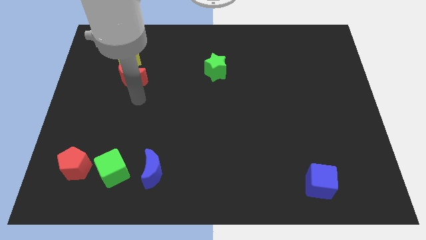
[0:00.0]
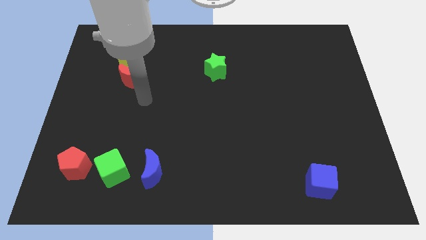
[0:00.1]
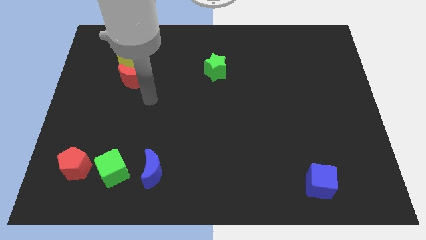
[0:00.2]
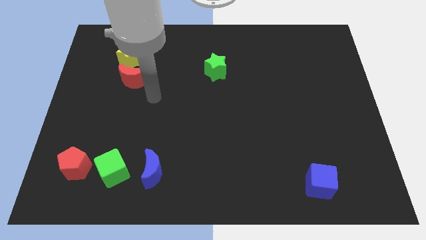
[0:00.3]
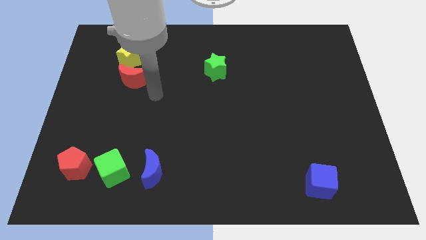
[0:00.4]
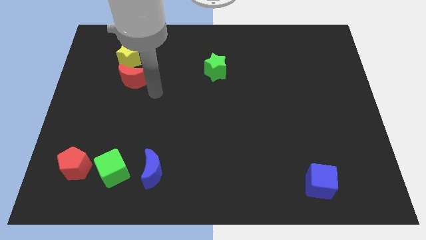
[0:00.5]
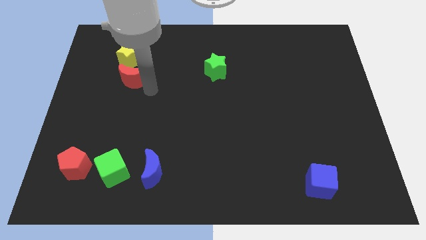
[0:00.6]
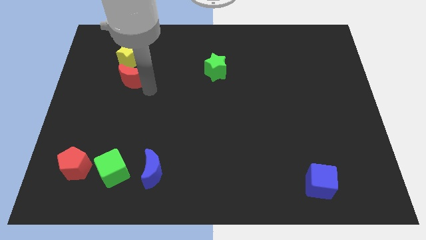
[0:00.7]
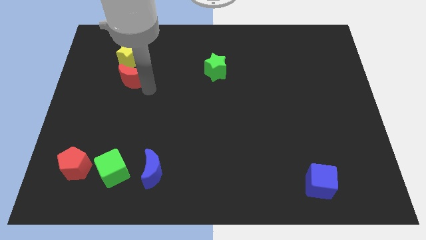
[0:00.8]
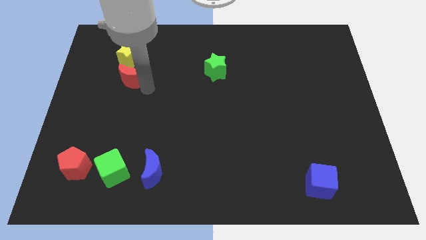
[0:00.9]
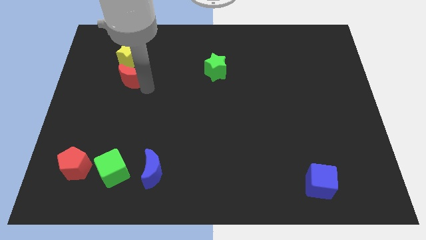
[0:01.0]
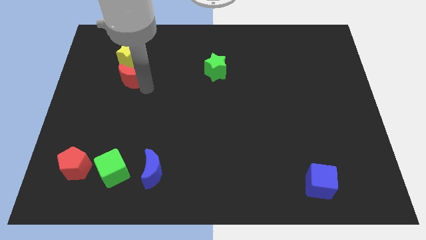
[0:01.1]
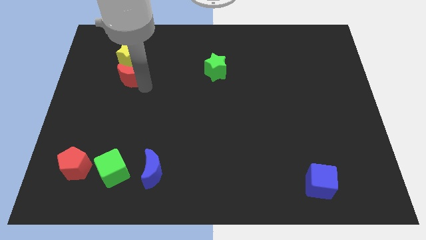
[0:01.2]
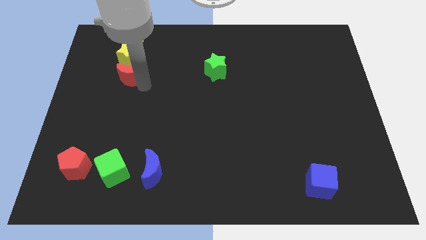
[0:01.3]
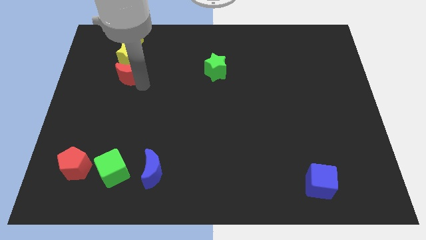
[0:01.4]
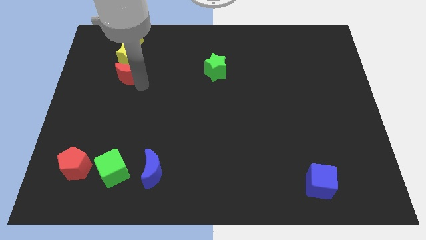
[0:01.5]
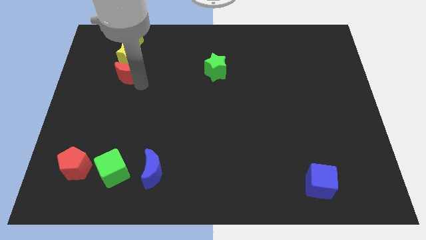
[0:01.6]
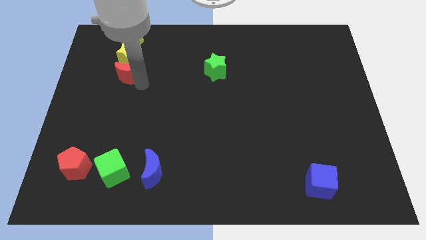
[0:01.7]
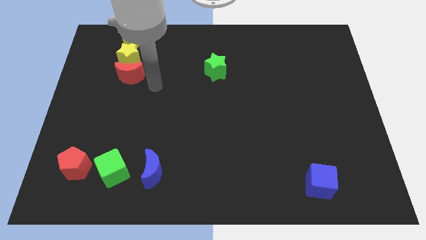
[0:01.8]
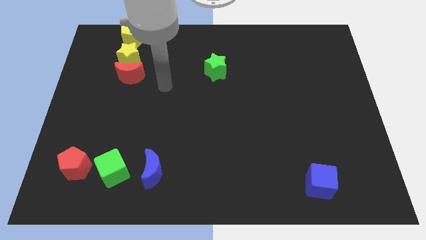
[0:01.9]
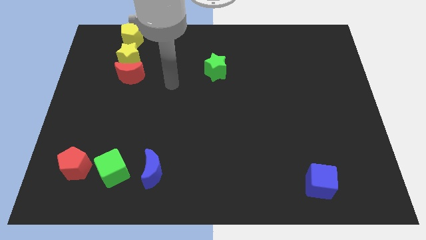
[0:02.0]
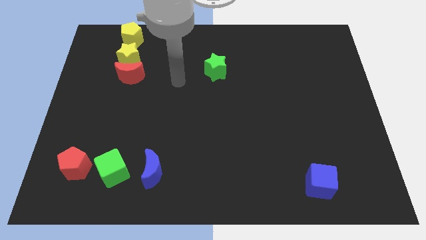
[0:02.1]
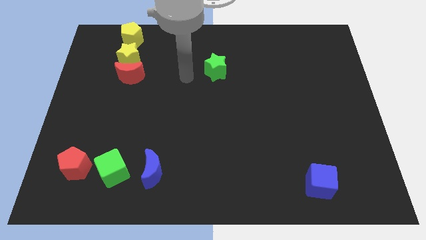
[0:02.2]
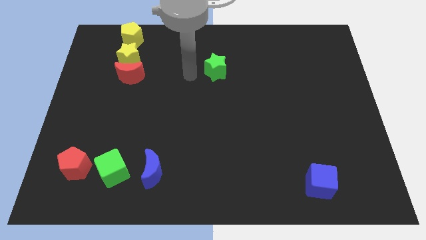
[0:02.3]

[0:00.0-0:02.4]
push the red moon slightly to the bottom side of the yellow star

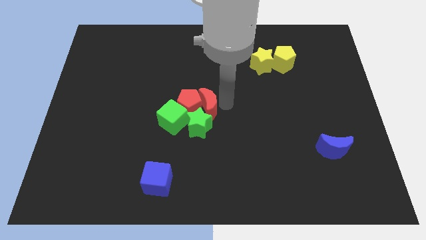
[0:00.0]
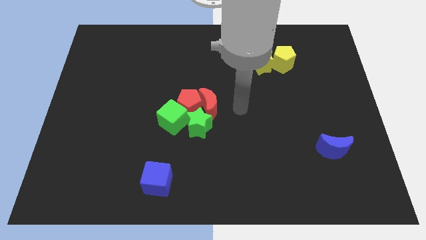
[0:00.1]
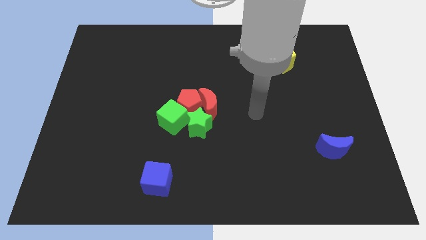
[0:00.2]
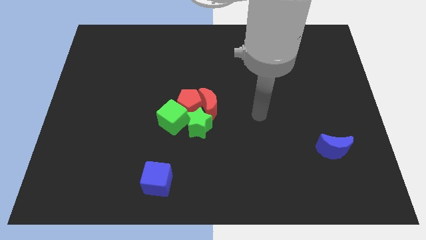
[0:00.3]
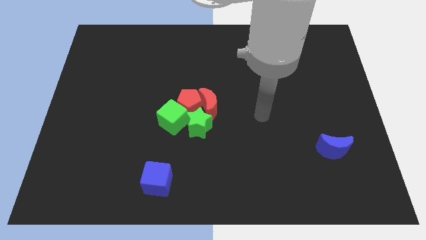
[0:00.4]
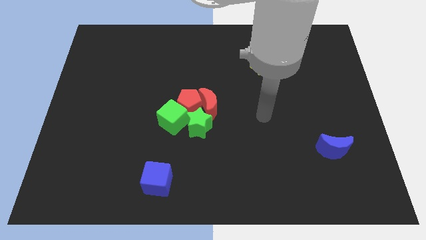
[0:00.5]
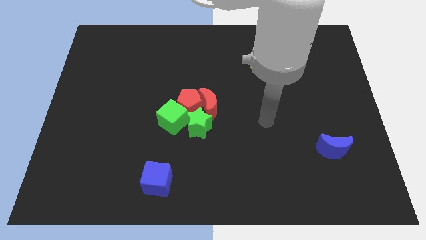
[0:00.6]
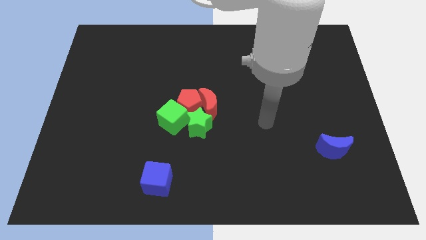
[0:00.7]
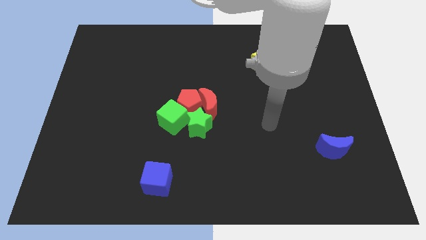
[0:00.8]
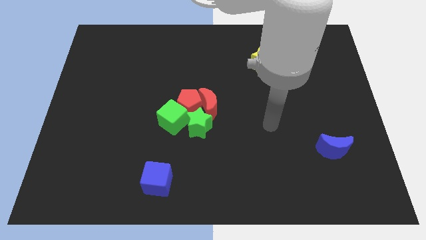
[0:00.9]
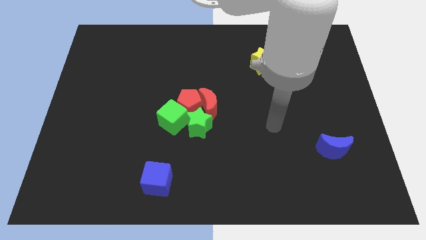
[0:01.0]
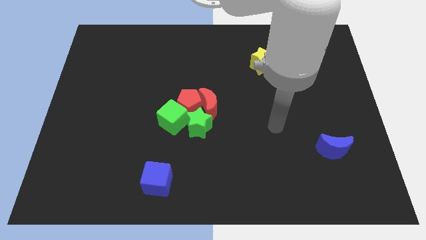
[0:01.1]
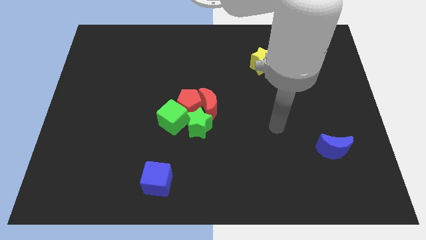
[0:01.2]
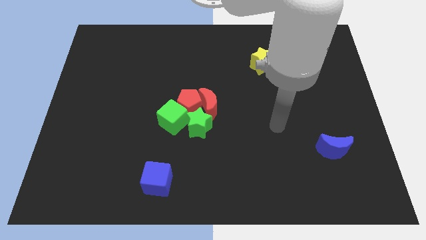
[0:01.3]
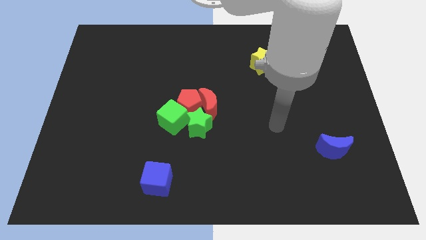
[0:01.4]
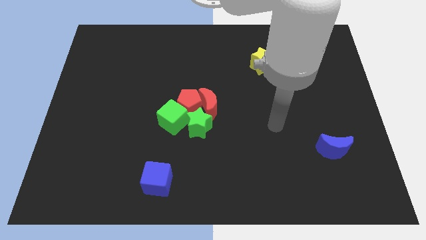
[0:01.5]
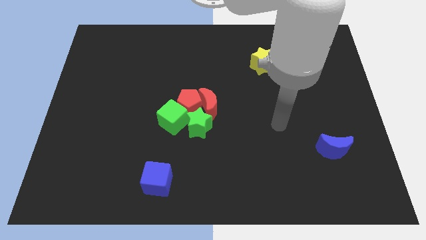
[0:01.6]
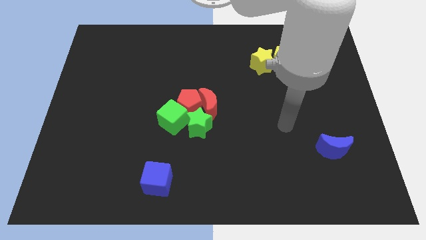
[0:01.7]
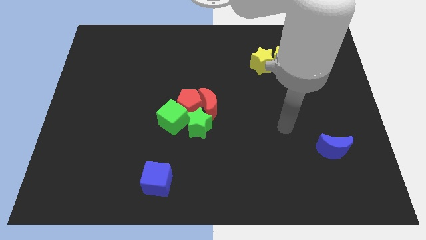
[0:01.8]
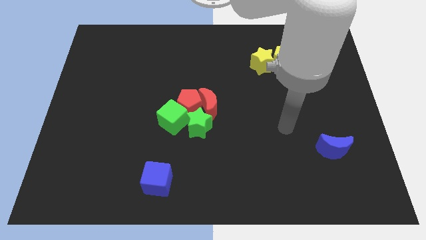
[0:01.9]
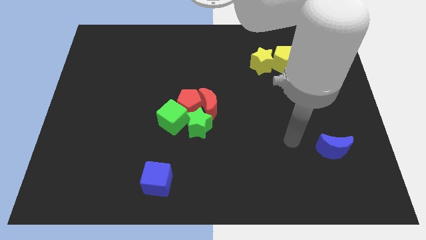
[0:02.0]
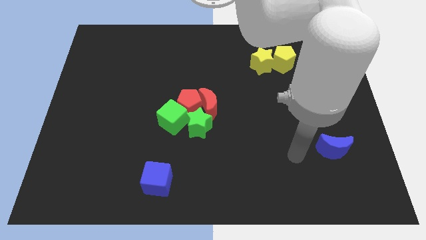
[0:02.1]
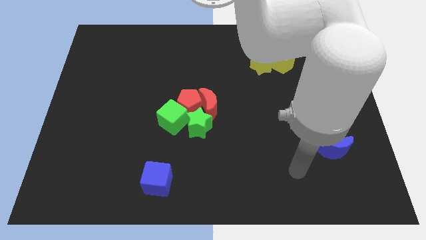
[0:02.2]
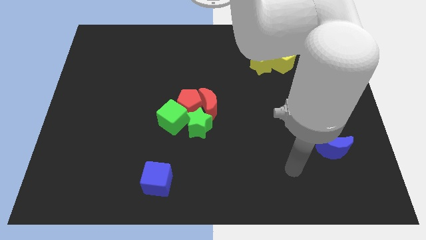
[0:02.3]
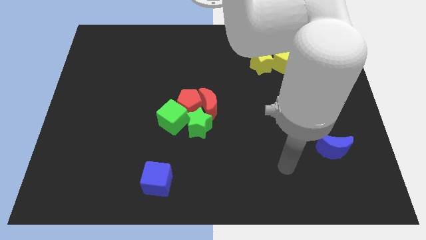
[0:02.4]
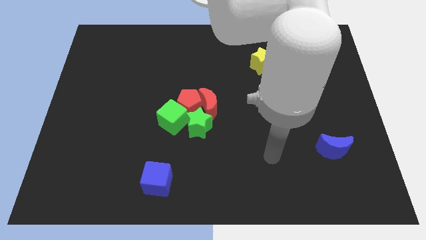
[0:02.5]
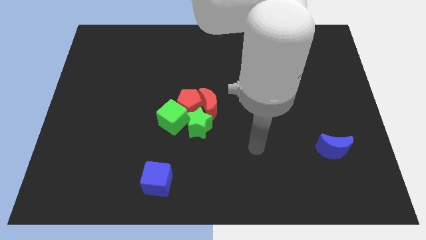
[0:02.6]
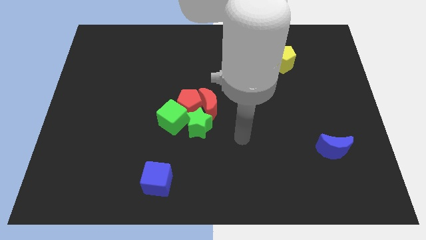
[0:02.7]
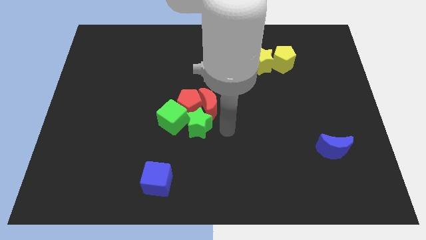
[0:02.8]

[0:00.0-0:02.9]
place your arm to the right side of the green star

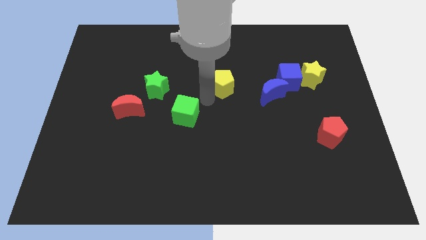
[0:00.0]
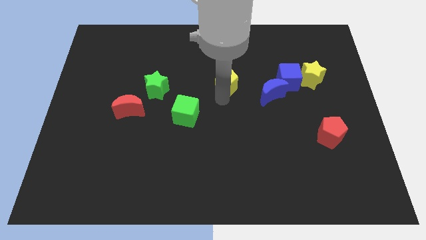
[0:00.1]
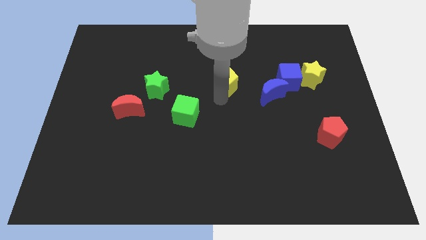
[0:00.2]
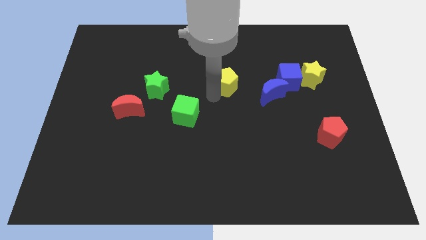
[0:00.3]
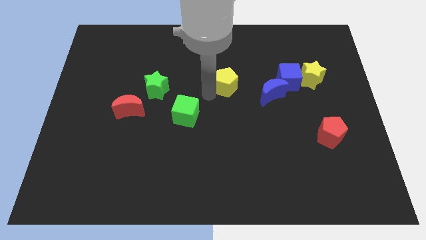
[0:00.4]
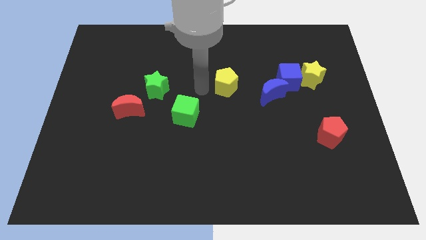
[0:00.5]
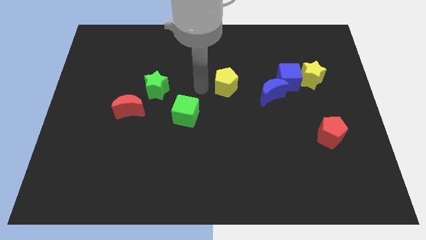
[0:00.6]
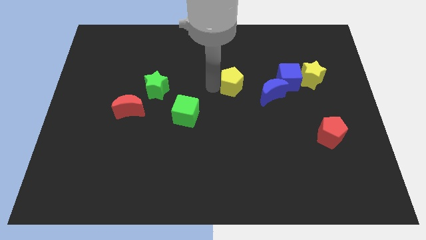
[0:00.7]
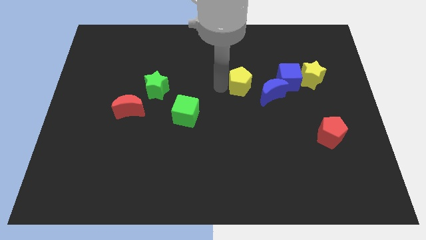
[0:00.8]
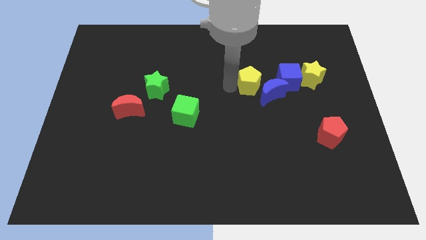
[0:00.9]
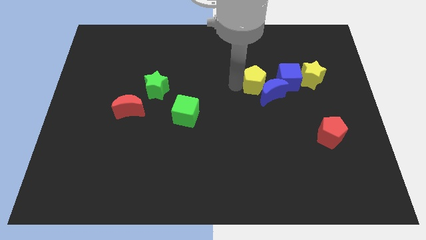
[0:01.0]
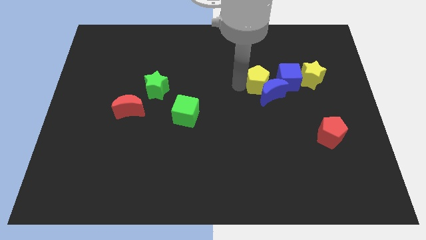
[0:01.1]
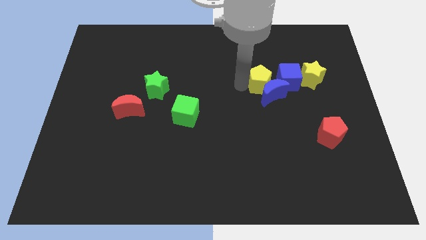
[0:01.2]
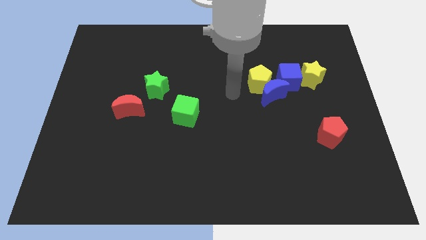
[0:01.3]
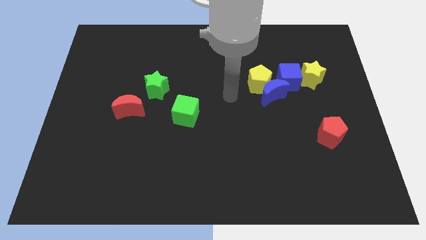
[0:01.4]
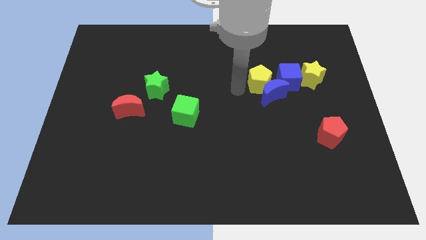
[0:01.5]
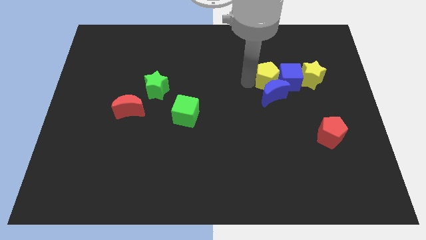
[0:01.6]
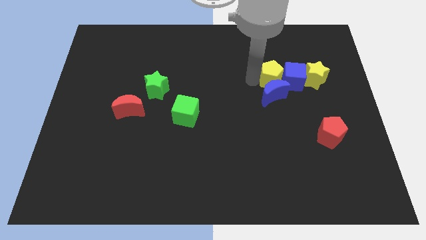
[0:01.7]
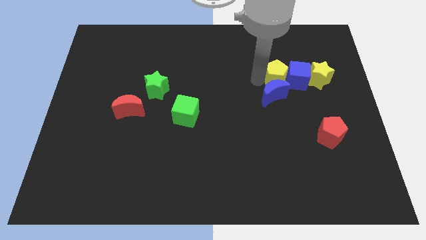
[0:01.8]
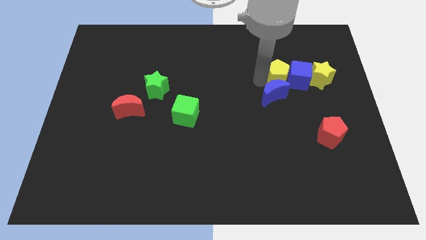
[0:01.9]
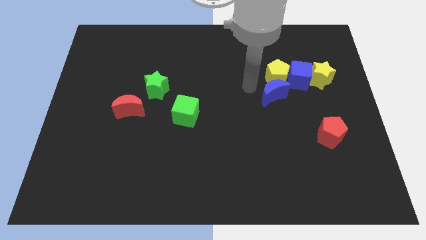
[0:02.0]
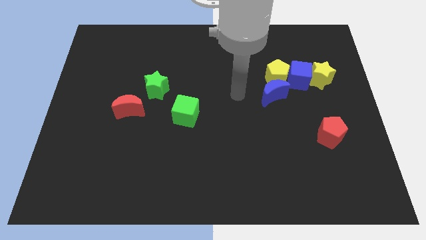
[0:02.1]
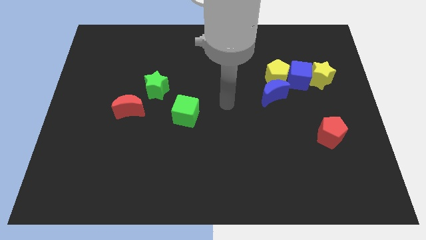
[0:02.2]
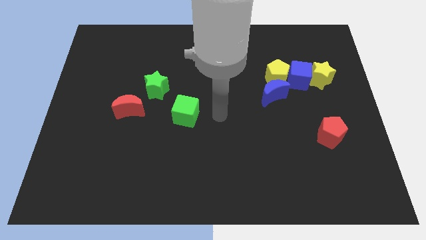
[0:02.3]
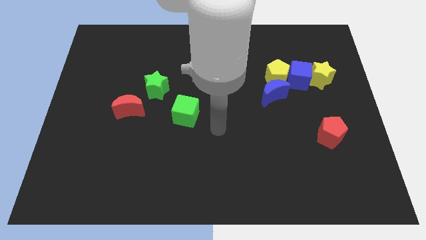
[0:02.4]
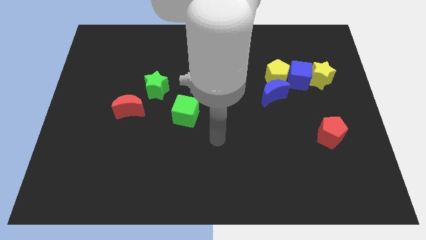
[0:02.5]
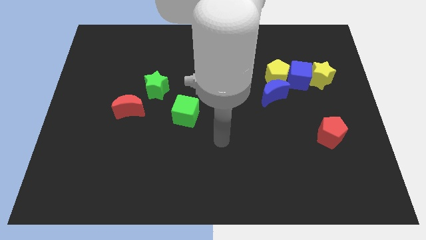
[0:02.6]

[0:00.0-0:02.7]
push the blue and yellow blocks towards the right side of the board

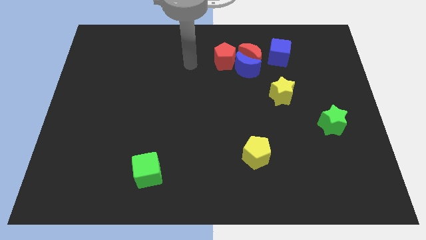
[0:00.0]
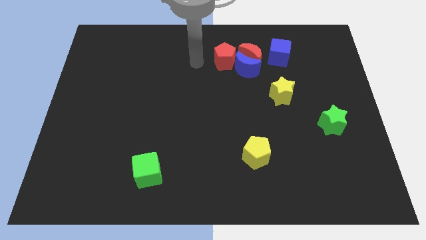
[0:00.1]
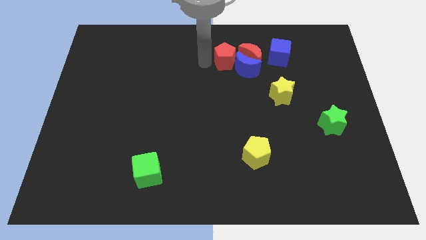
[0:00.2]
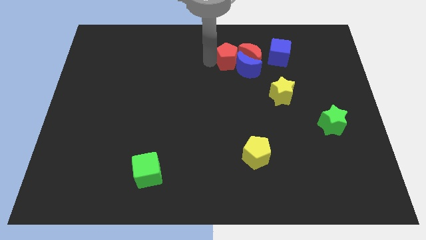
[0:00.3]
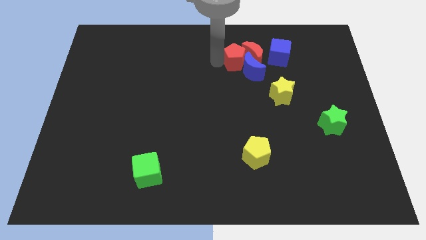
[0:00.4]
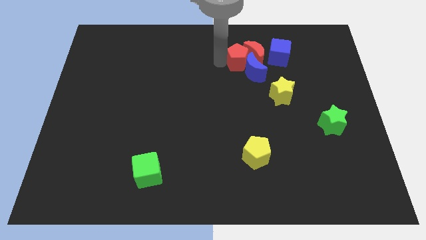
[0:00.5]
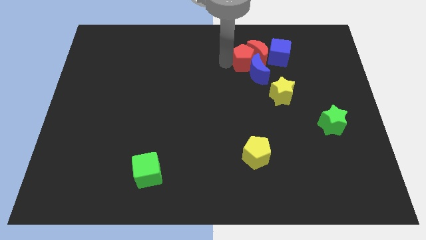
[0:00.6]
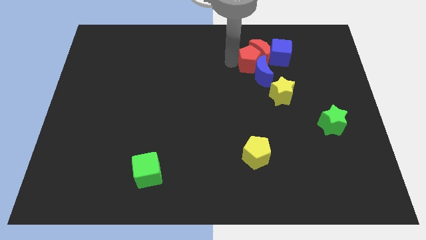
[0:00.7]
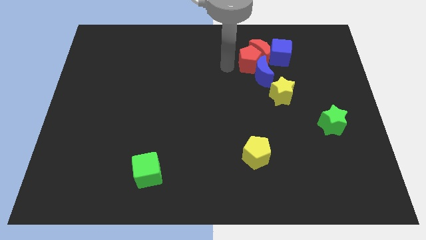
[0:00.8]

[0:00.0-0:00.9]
push the red pentagon into the red crescent

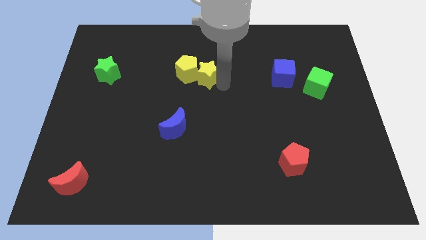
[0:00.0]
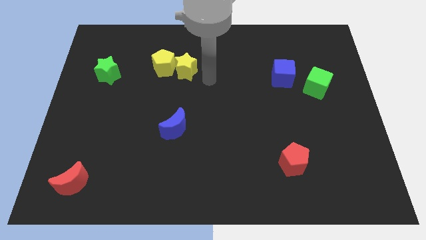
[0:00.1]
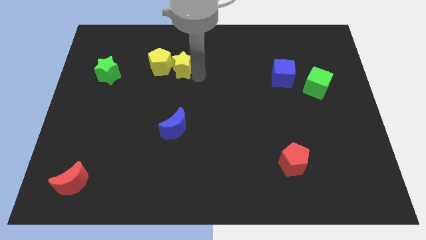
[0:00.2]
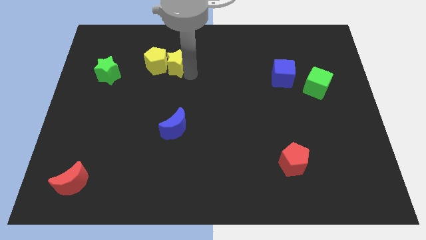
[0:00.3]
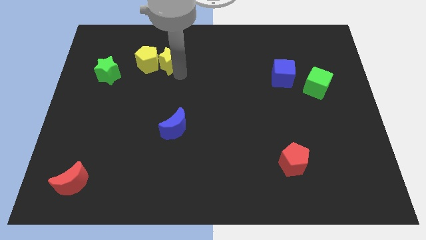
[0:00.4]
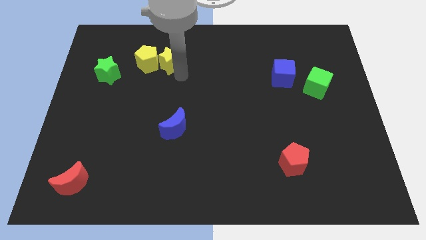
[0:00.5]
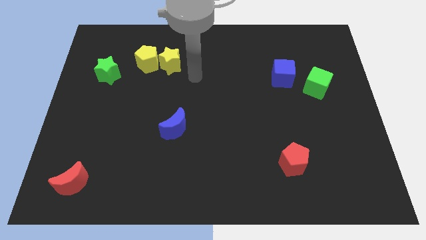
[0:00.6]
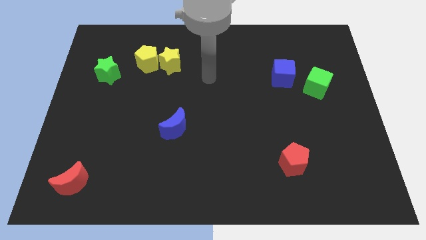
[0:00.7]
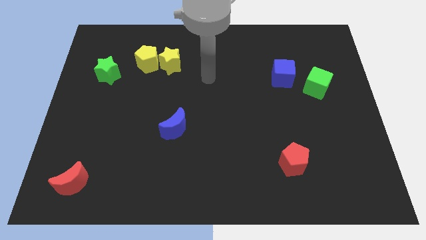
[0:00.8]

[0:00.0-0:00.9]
push the yellow pentagon towards the left side using the yellow star
